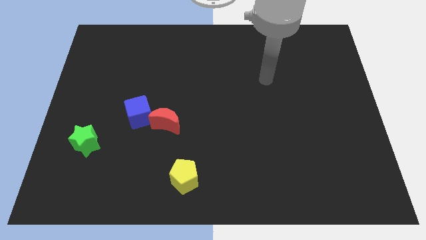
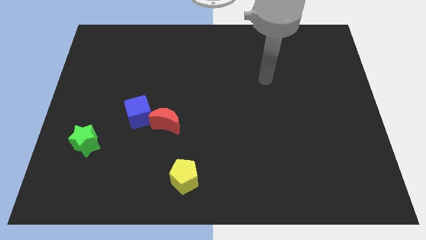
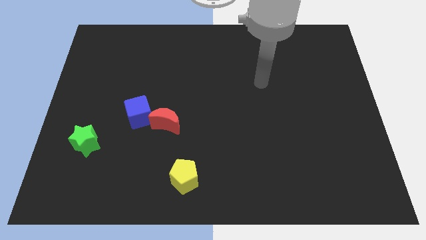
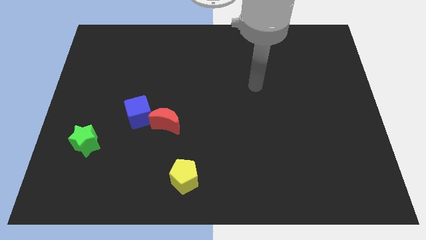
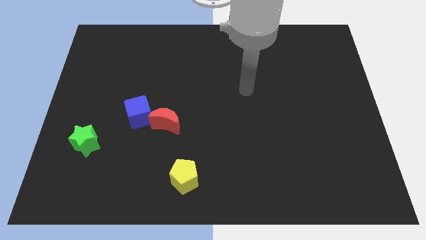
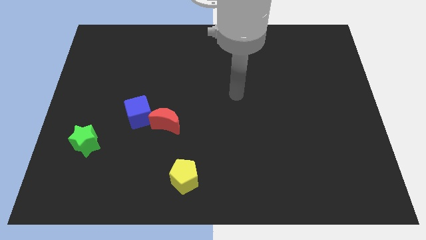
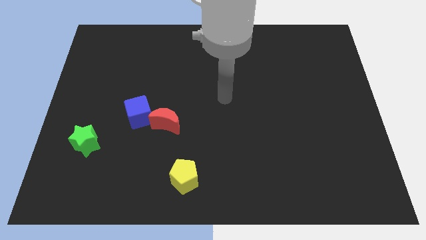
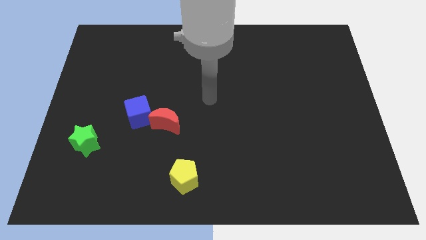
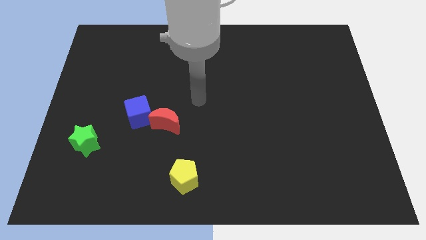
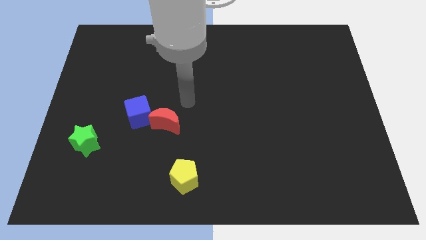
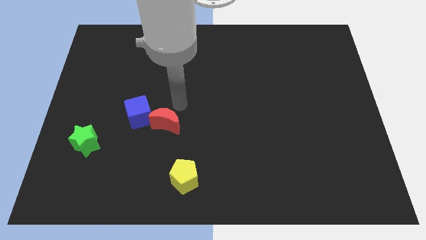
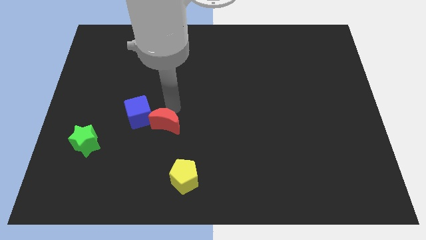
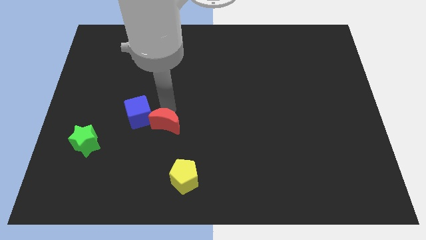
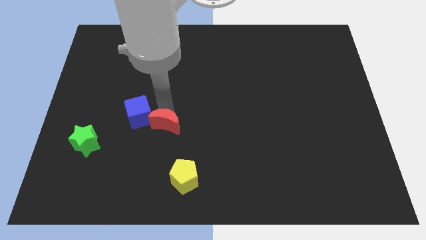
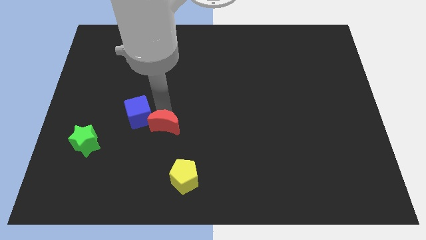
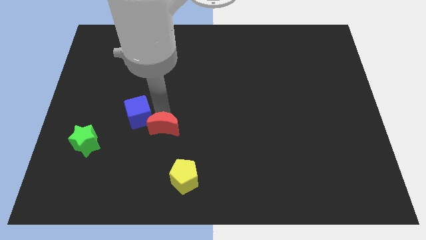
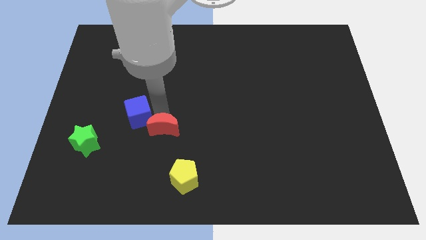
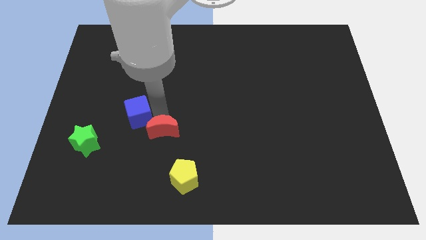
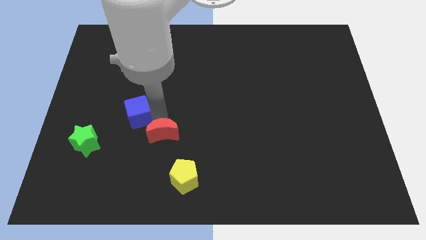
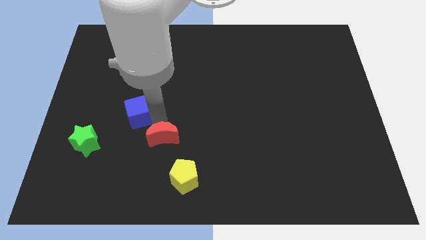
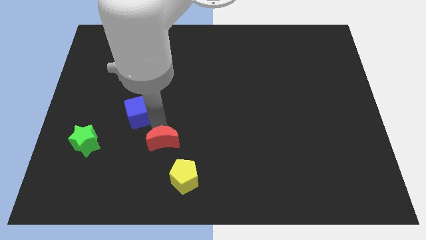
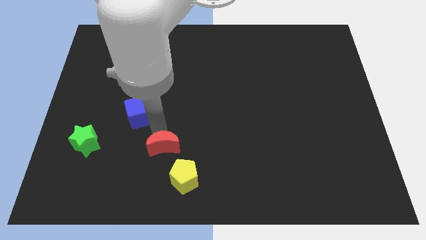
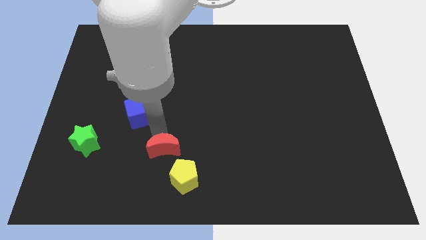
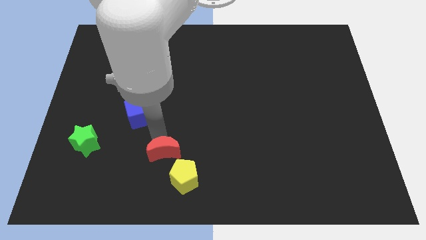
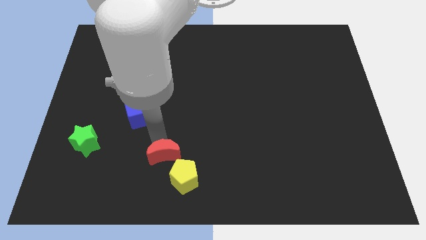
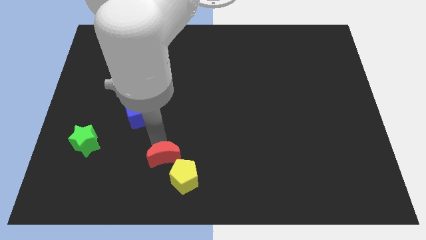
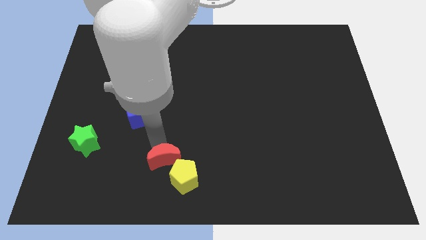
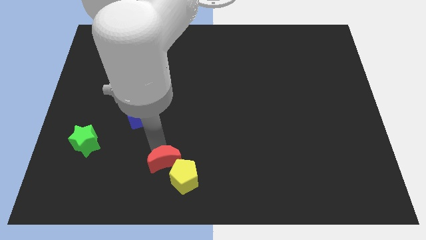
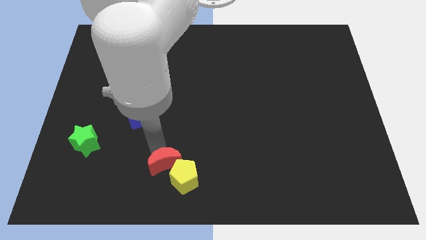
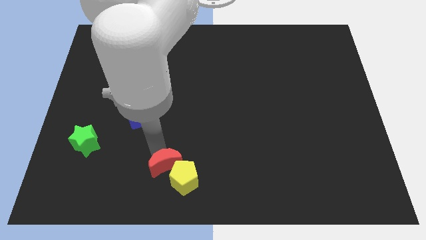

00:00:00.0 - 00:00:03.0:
slide the moon towards the yellow pentagon

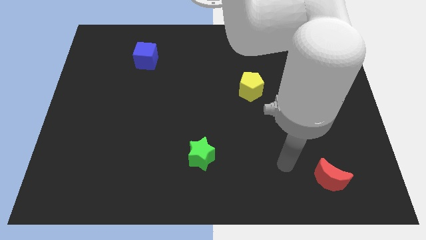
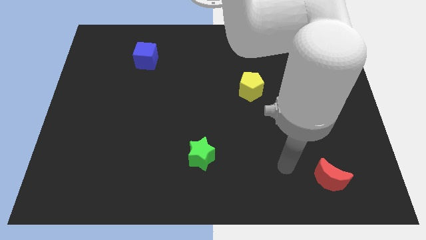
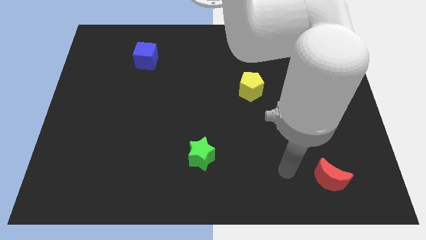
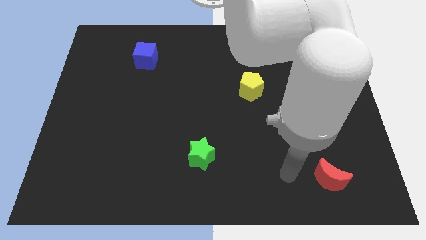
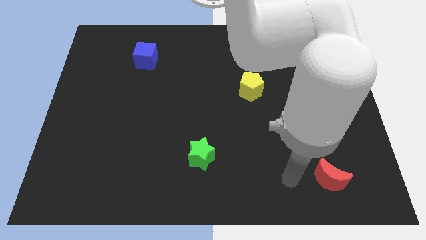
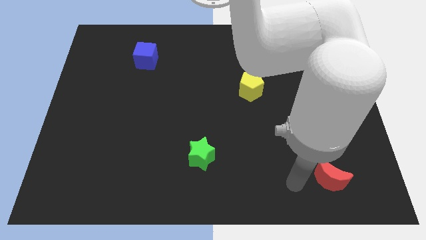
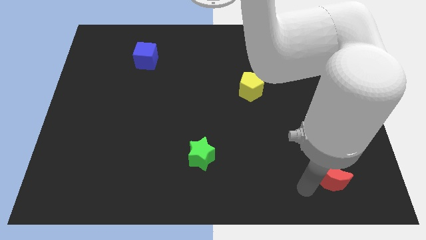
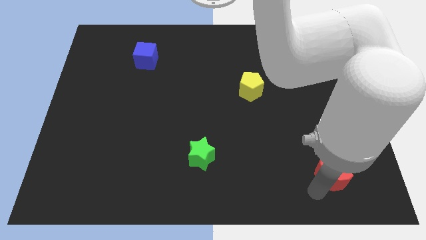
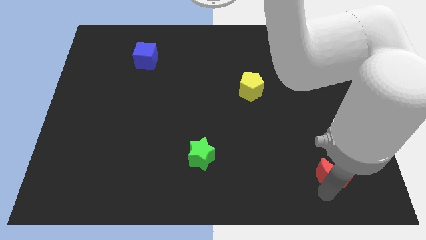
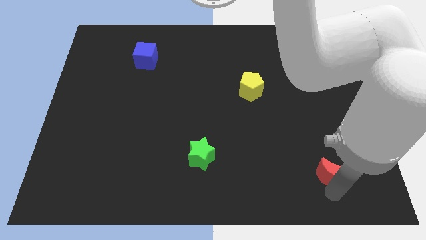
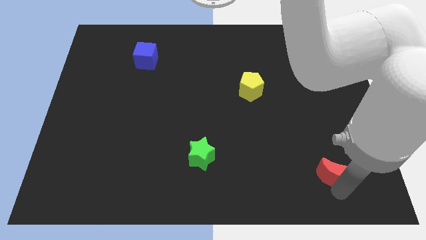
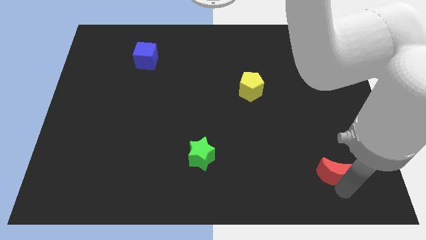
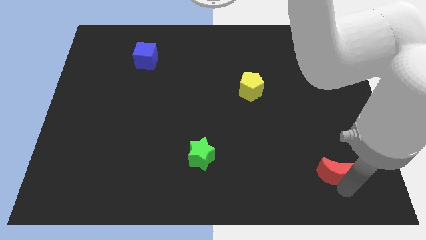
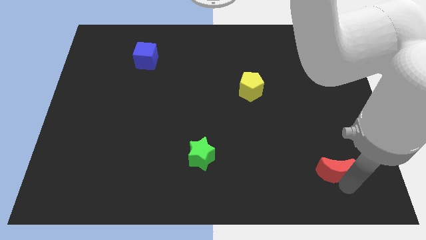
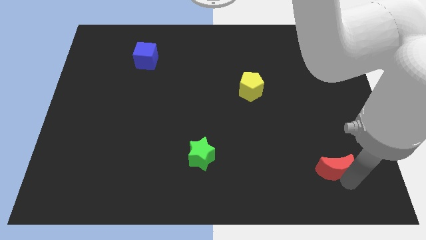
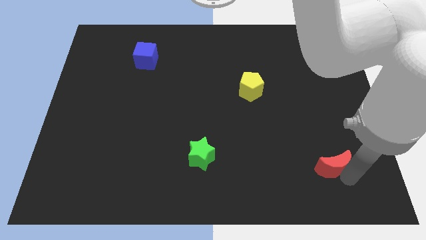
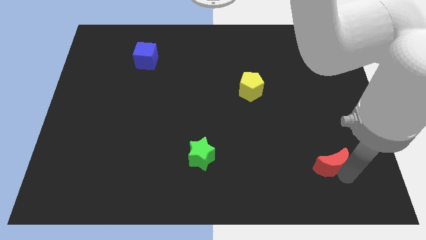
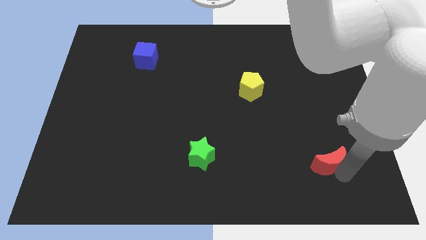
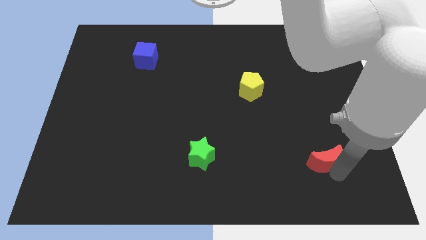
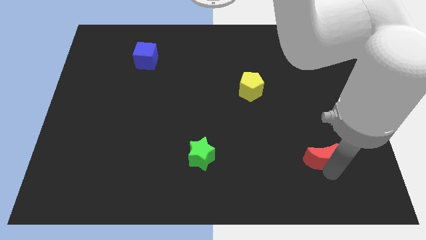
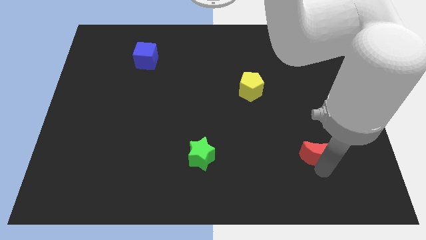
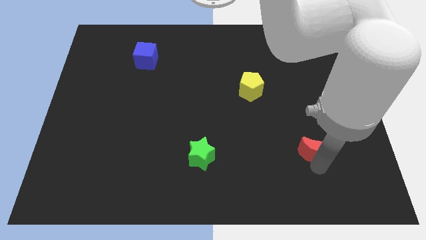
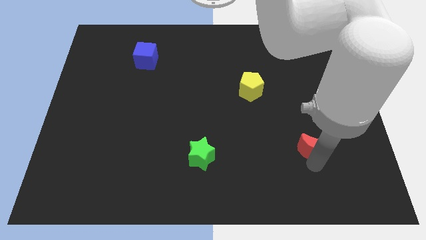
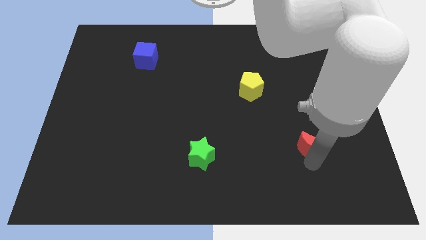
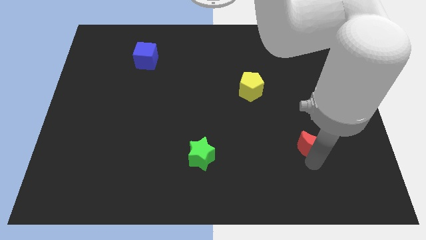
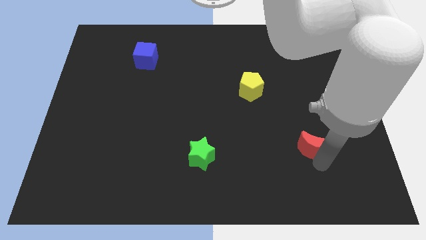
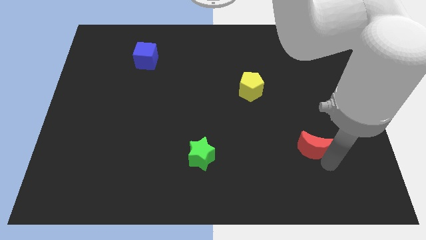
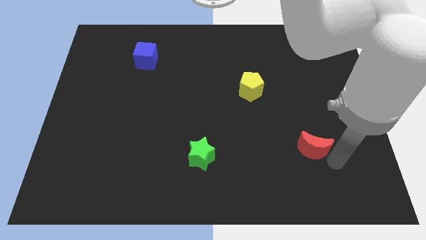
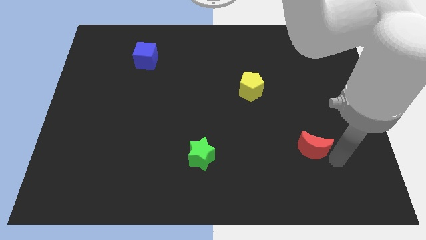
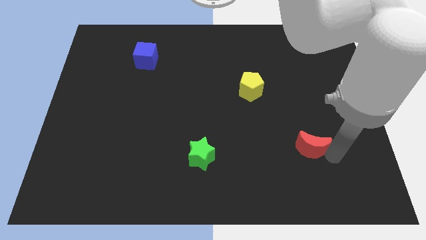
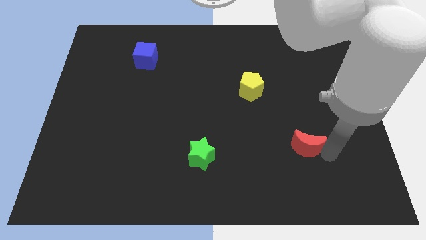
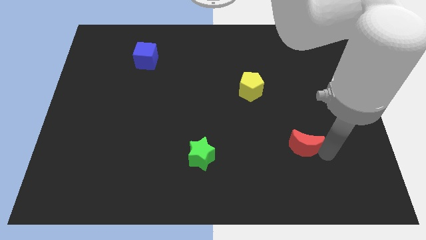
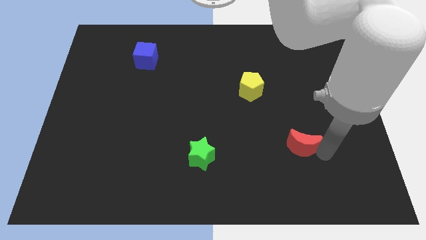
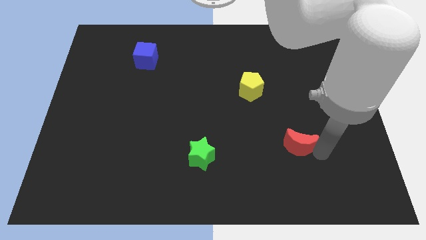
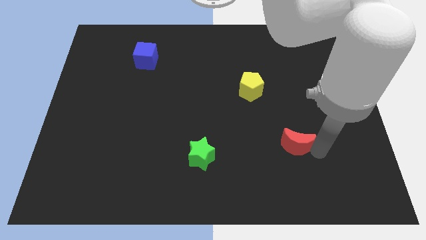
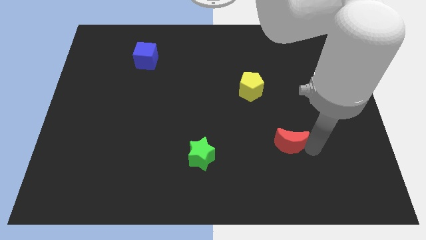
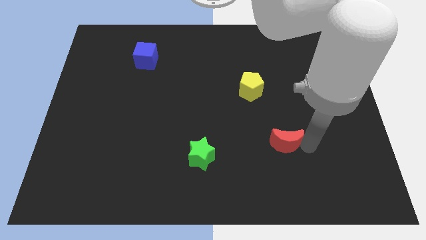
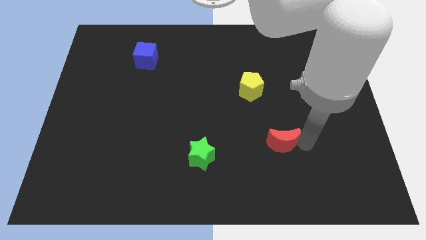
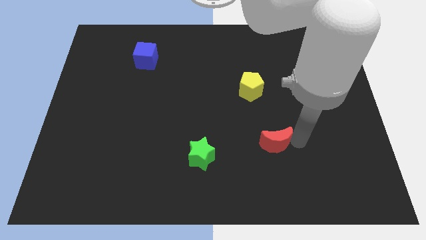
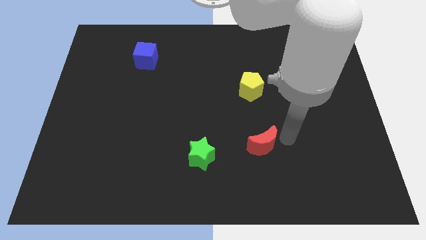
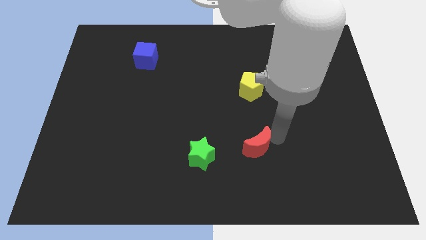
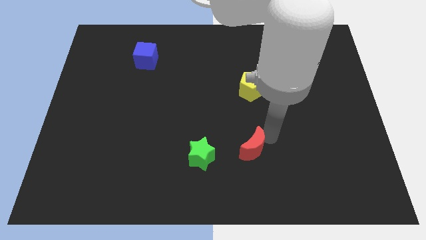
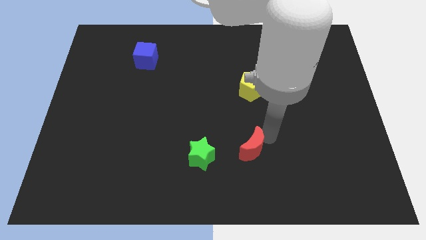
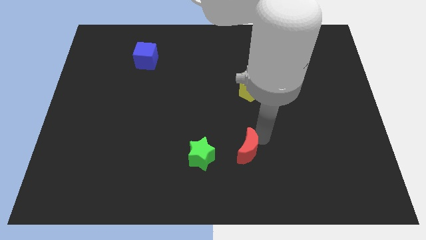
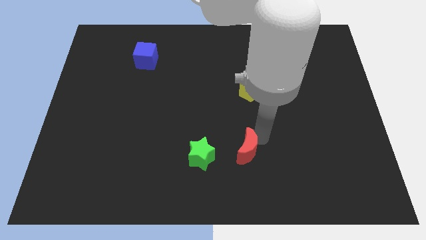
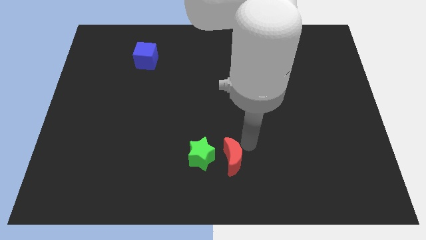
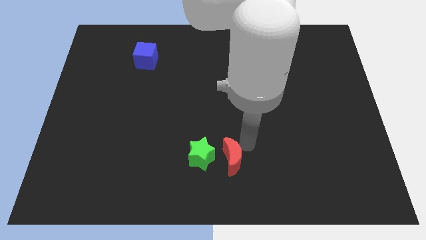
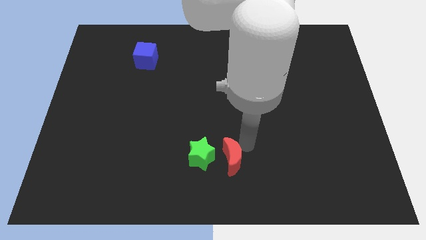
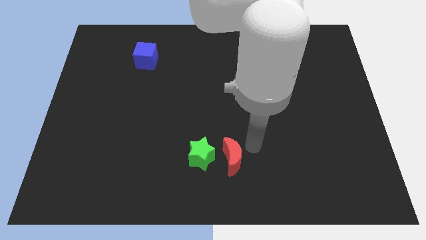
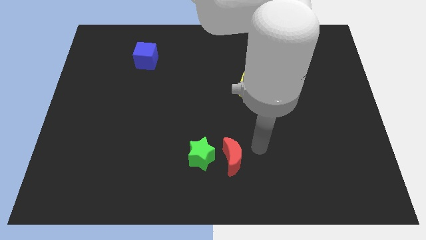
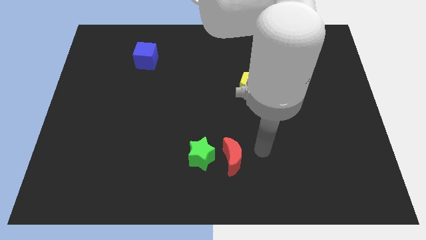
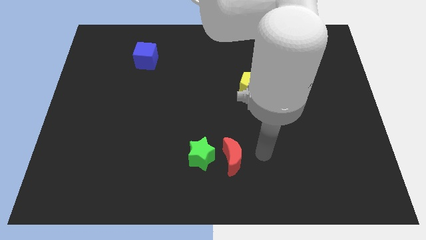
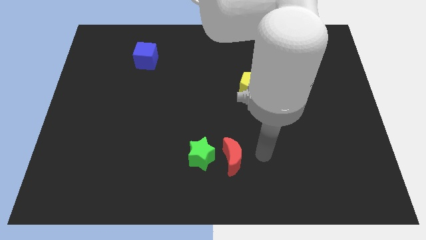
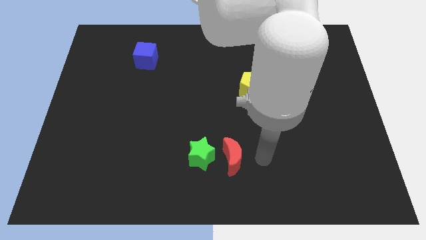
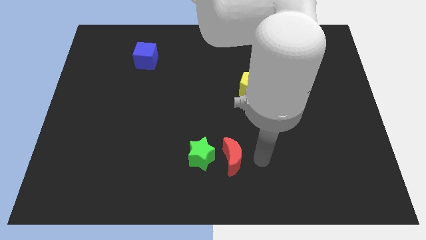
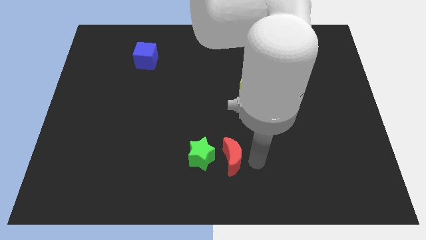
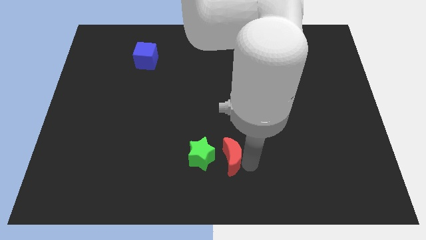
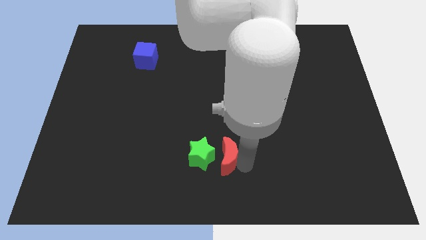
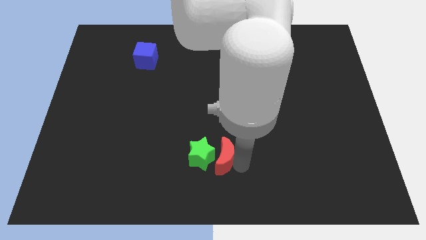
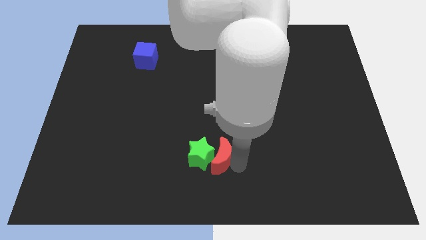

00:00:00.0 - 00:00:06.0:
slide the red moon towards the star
